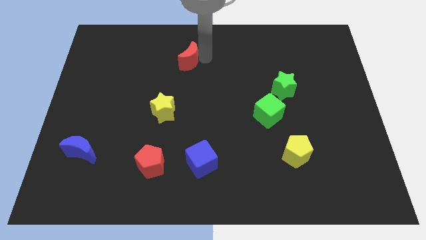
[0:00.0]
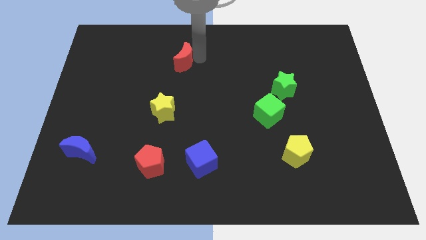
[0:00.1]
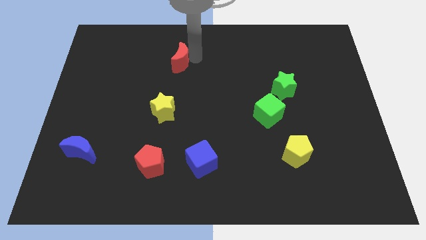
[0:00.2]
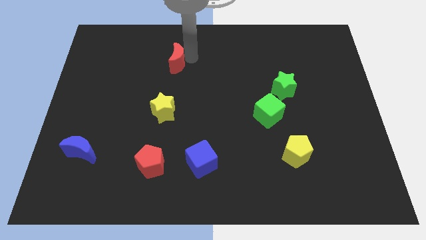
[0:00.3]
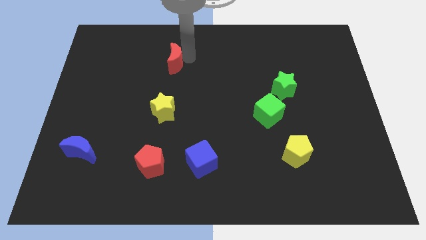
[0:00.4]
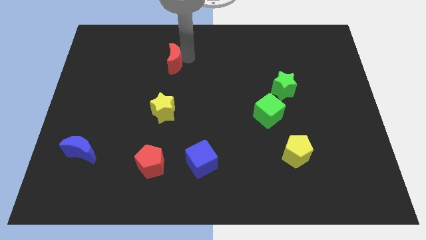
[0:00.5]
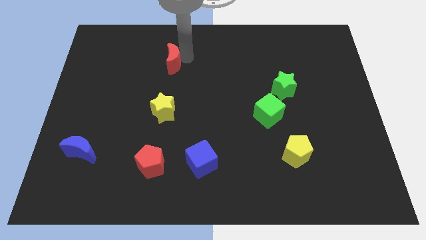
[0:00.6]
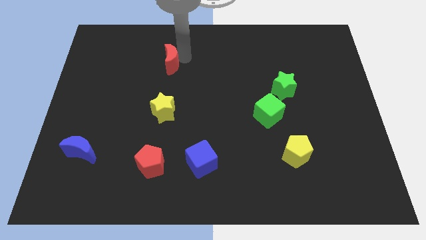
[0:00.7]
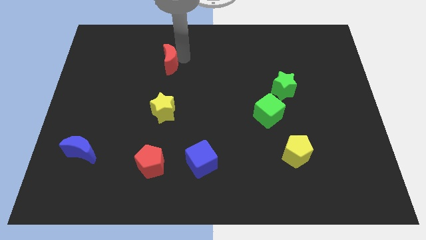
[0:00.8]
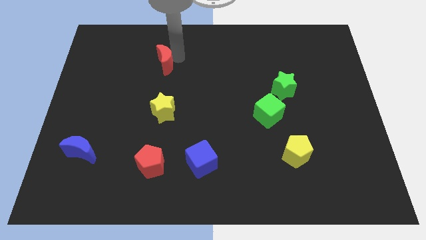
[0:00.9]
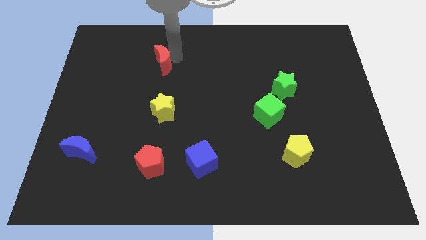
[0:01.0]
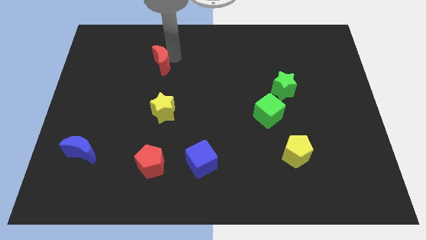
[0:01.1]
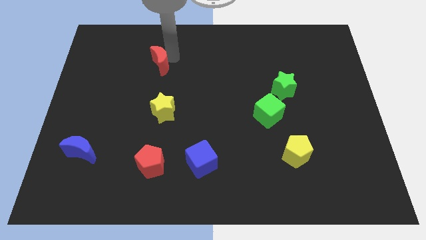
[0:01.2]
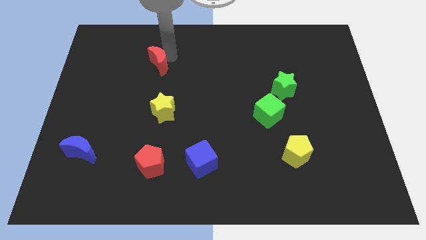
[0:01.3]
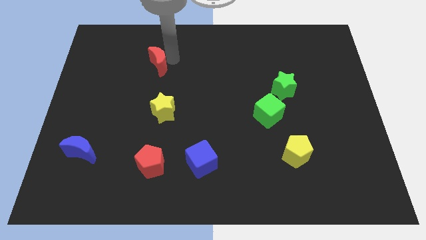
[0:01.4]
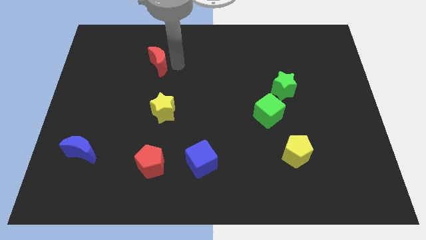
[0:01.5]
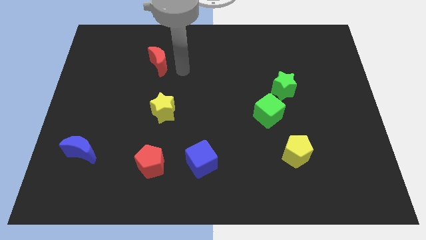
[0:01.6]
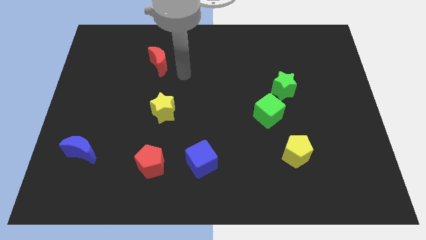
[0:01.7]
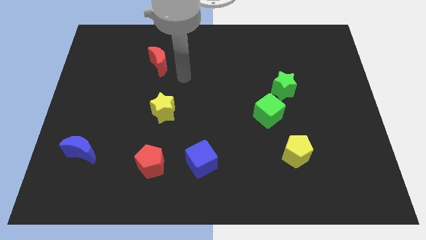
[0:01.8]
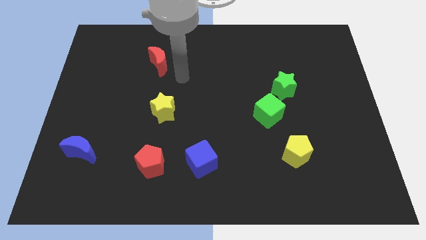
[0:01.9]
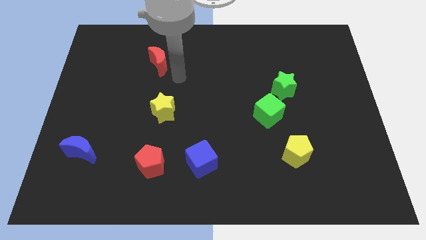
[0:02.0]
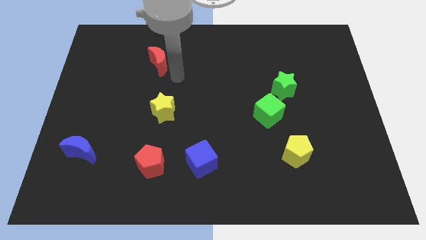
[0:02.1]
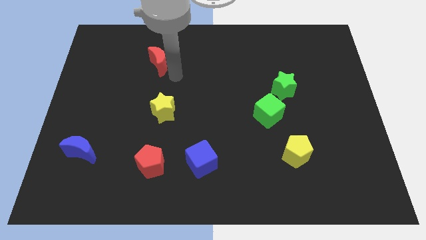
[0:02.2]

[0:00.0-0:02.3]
place red crescent above yellow star

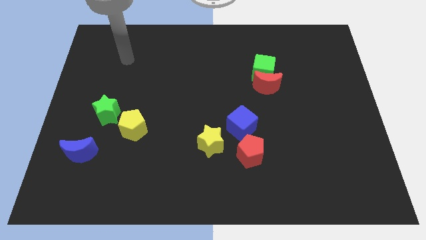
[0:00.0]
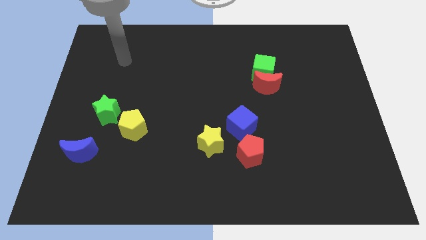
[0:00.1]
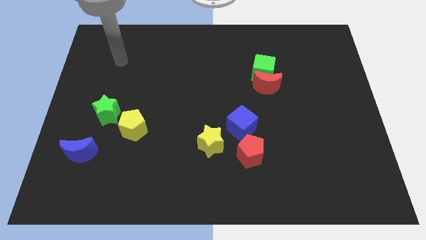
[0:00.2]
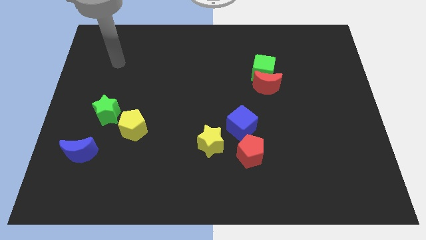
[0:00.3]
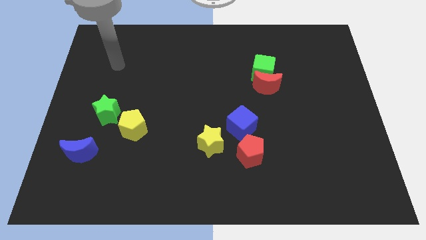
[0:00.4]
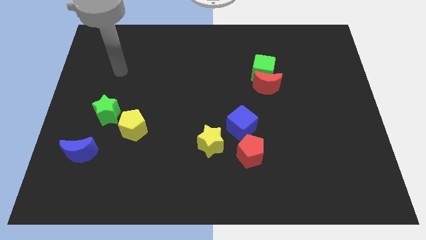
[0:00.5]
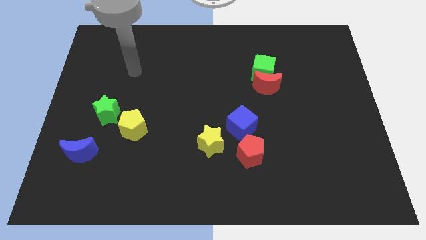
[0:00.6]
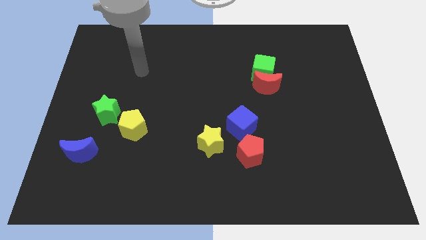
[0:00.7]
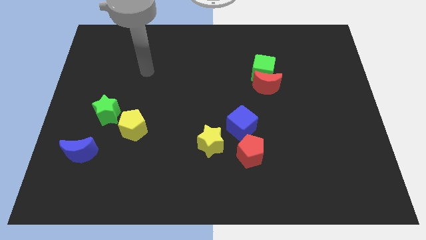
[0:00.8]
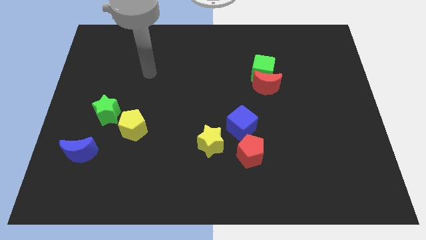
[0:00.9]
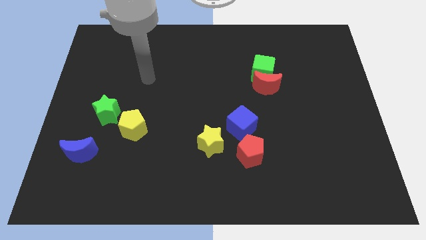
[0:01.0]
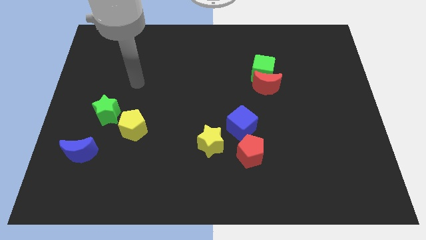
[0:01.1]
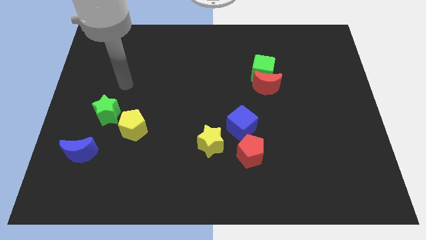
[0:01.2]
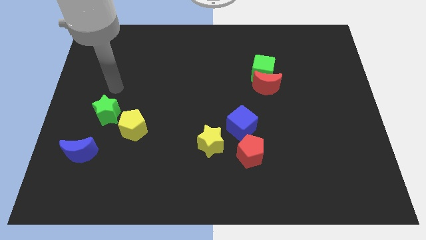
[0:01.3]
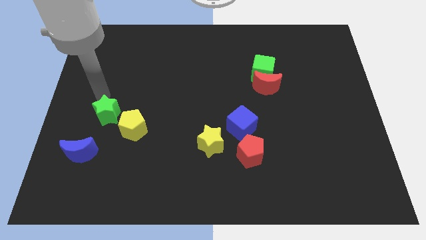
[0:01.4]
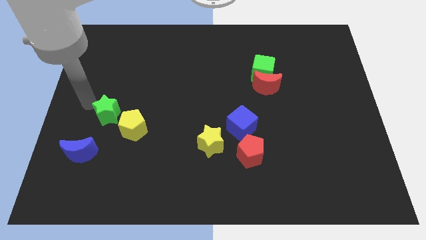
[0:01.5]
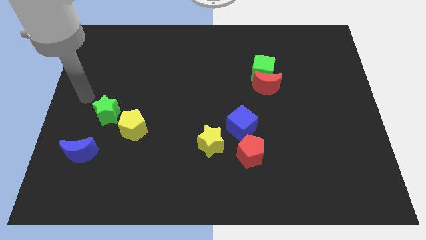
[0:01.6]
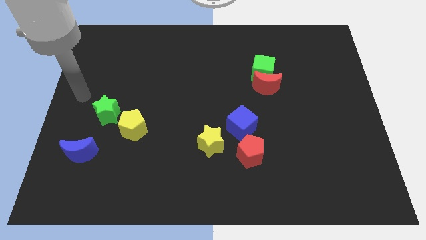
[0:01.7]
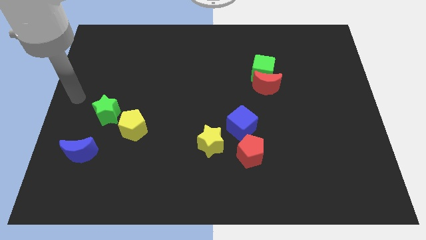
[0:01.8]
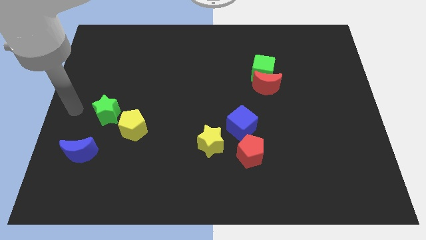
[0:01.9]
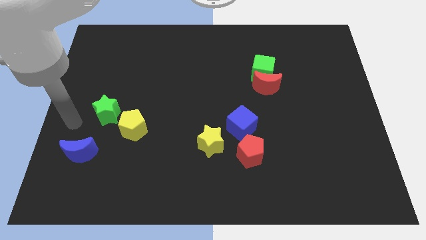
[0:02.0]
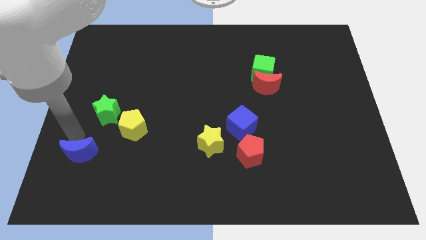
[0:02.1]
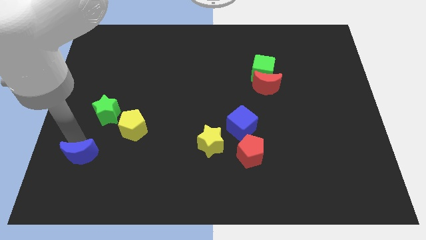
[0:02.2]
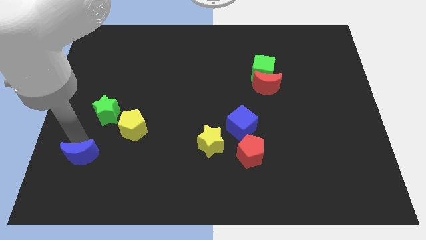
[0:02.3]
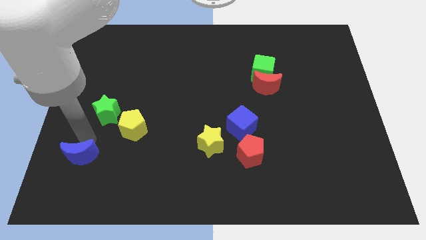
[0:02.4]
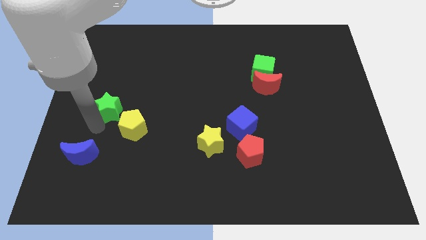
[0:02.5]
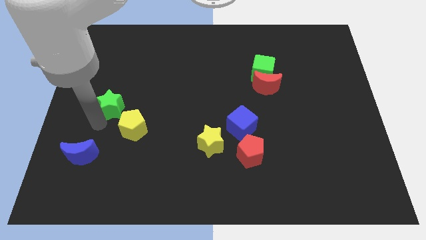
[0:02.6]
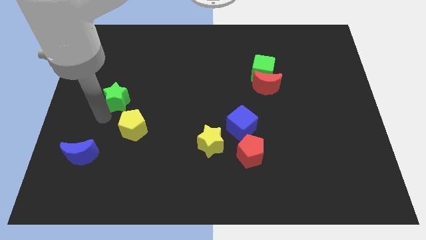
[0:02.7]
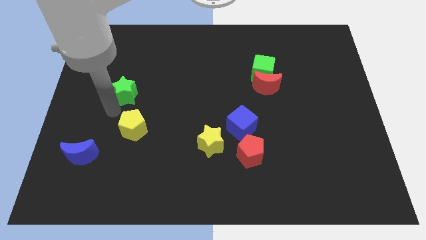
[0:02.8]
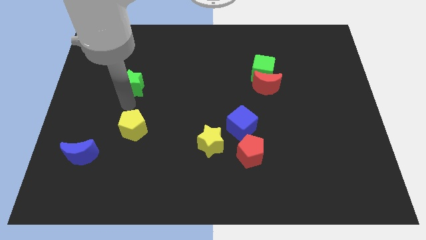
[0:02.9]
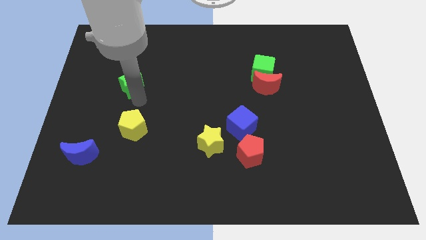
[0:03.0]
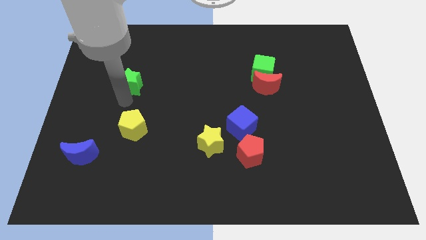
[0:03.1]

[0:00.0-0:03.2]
place the green star above the yellow pentagon

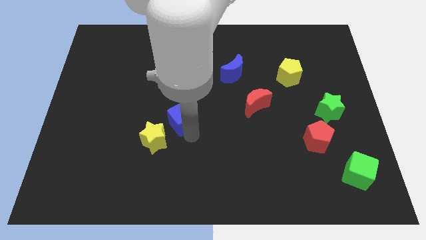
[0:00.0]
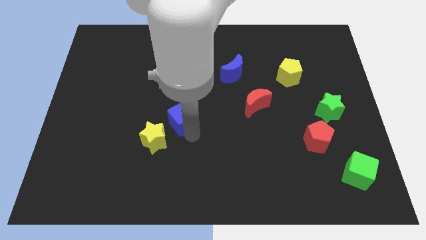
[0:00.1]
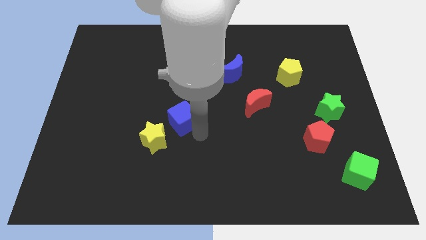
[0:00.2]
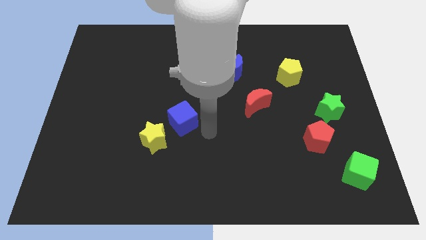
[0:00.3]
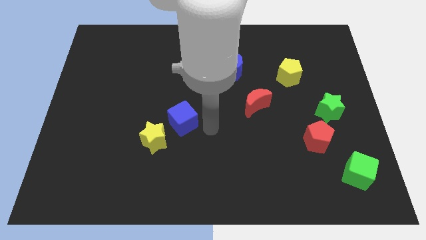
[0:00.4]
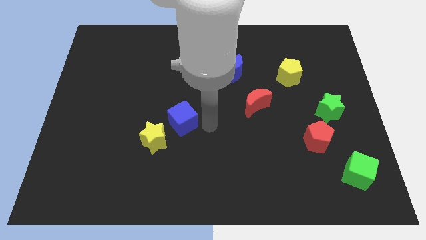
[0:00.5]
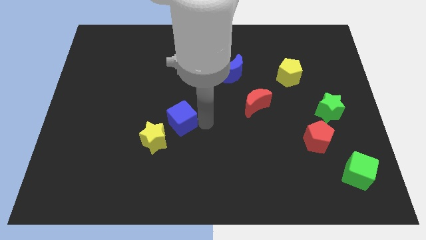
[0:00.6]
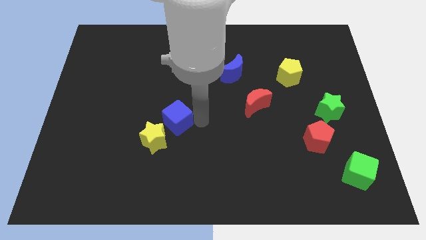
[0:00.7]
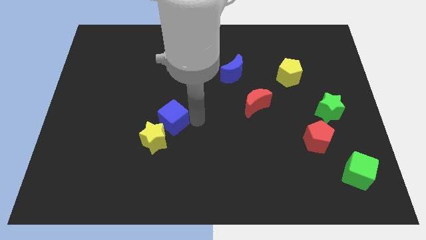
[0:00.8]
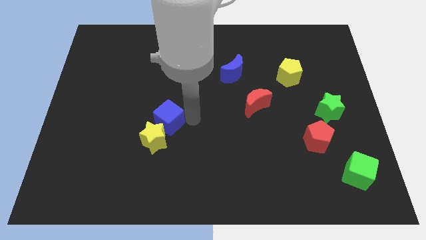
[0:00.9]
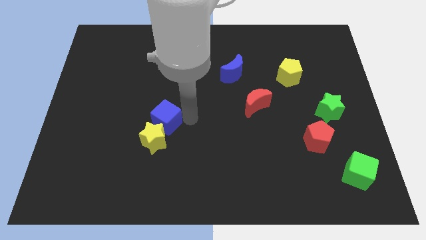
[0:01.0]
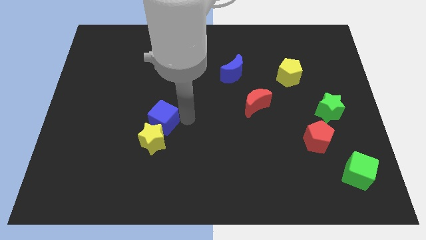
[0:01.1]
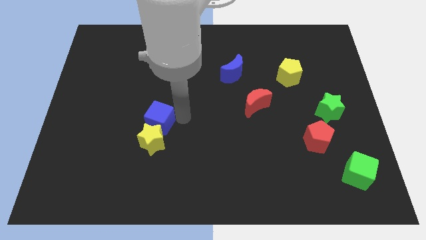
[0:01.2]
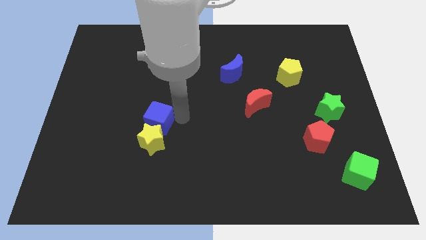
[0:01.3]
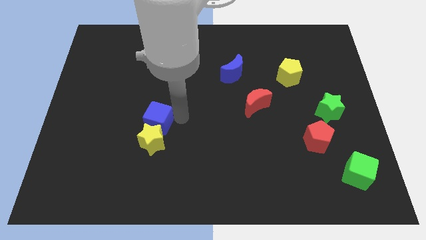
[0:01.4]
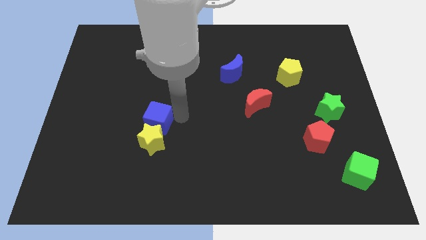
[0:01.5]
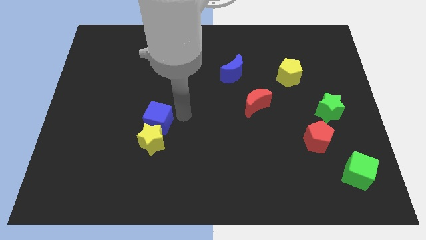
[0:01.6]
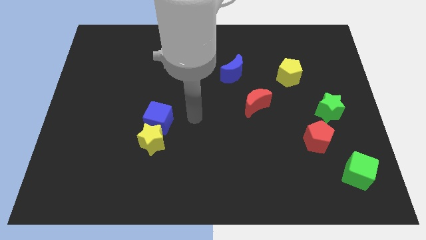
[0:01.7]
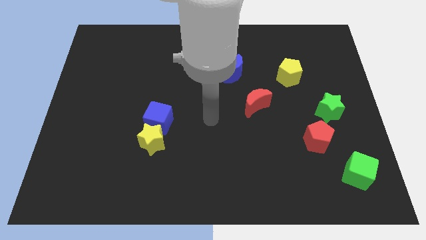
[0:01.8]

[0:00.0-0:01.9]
push the blue cube towards the top of the yellow star

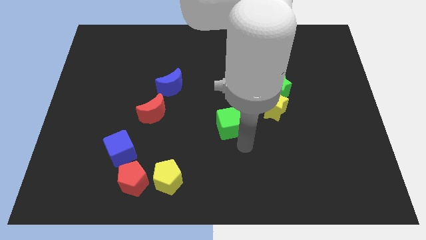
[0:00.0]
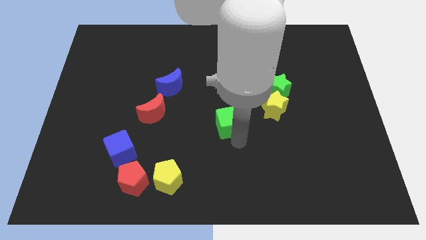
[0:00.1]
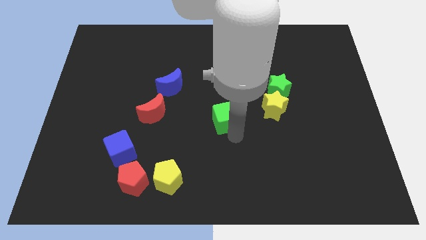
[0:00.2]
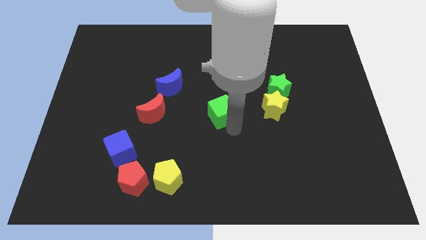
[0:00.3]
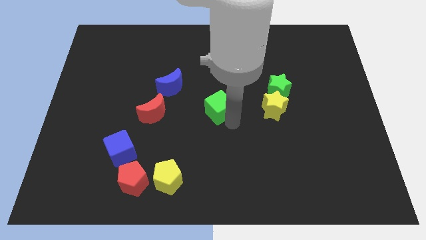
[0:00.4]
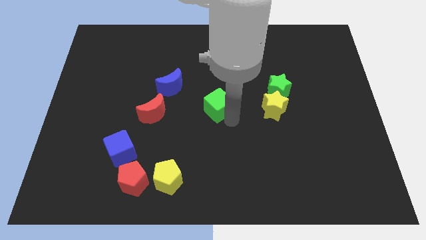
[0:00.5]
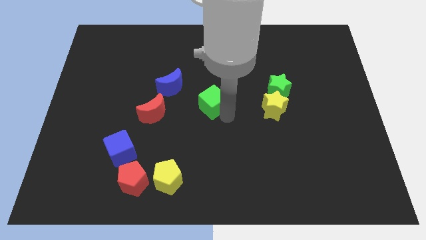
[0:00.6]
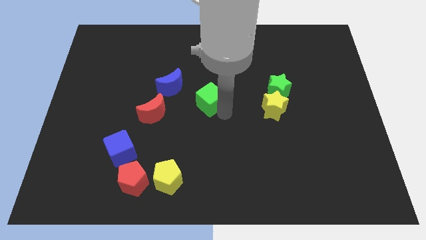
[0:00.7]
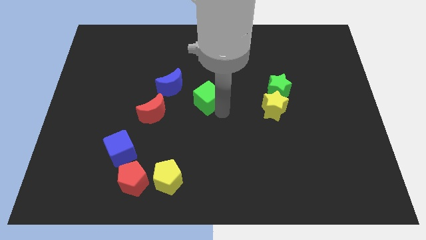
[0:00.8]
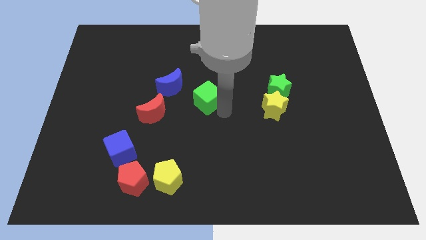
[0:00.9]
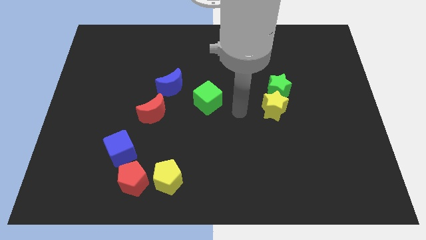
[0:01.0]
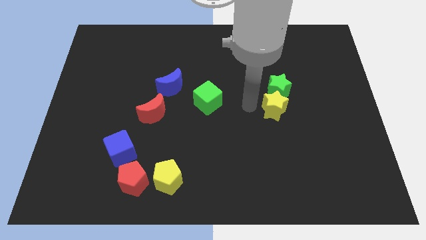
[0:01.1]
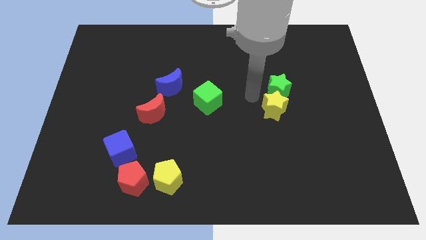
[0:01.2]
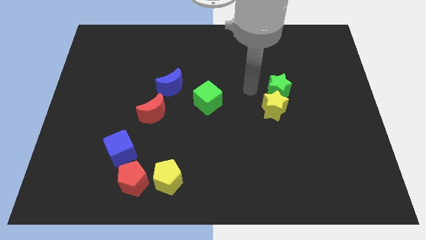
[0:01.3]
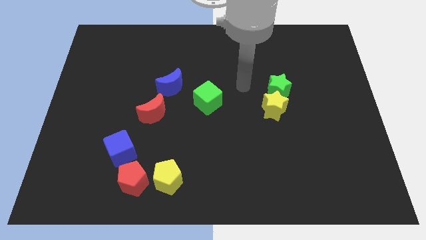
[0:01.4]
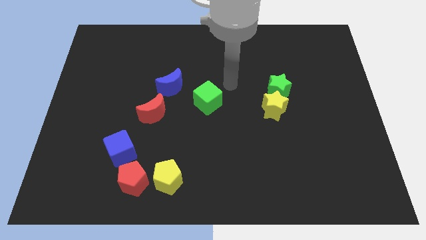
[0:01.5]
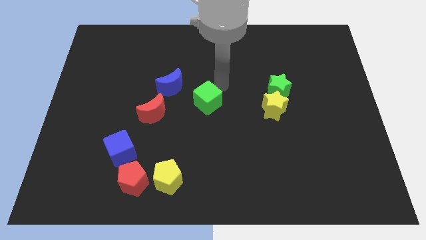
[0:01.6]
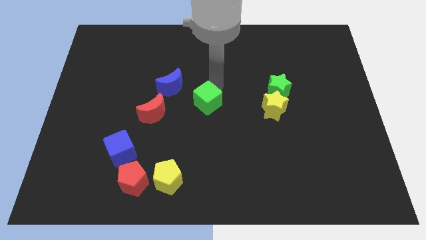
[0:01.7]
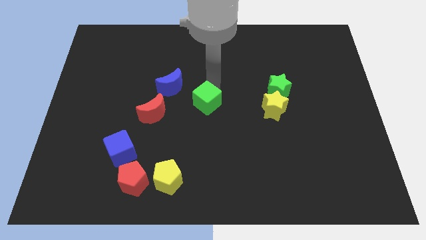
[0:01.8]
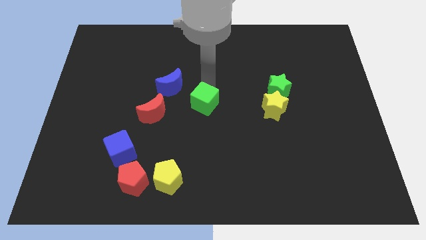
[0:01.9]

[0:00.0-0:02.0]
place green cube at the center of the board
